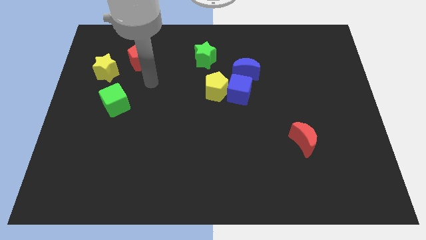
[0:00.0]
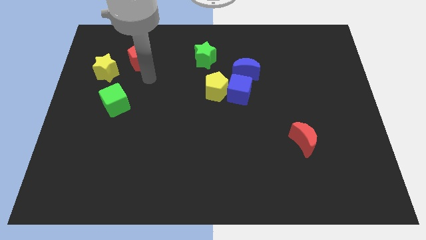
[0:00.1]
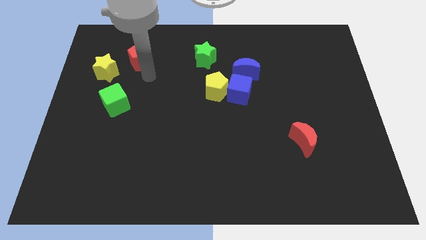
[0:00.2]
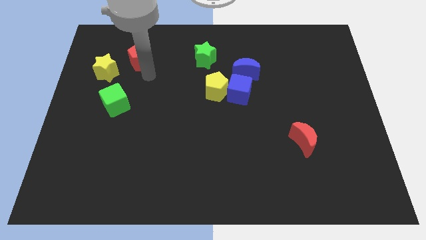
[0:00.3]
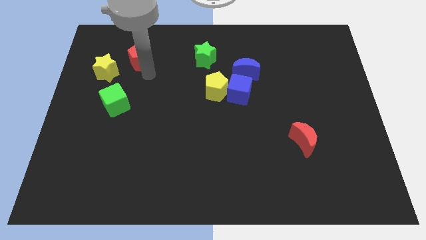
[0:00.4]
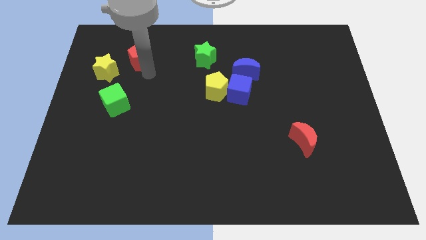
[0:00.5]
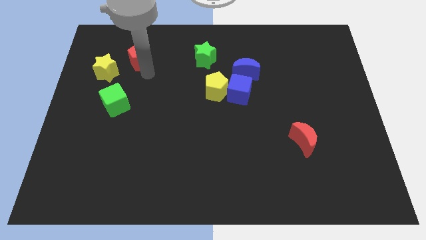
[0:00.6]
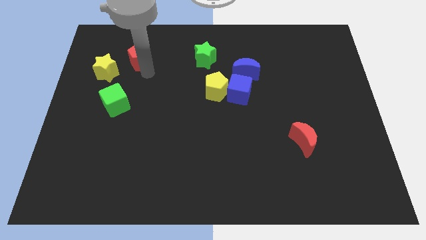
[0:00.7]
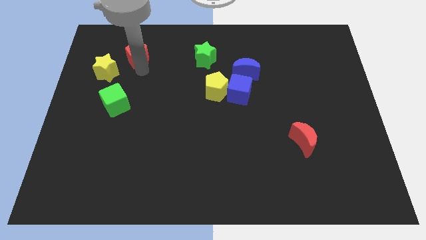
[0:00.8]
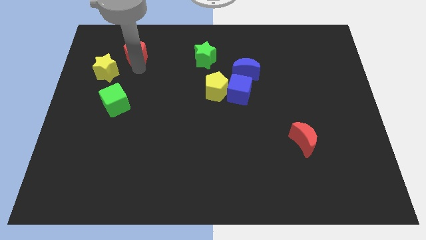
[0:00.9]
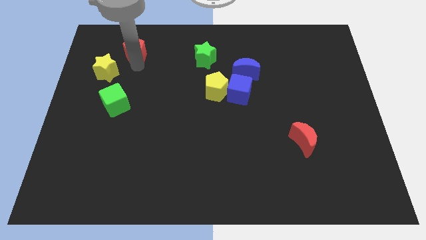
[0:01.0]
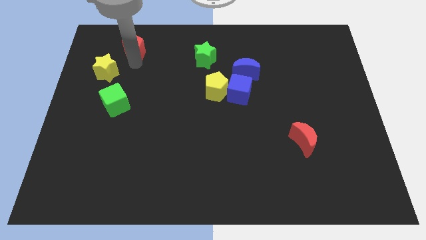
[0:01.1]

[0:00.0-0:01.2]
move the red pentagon slightly up

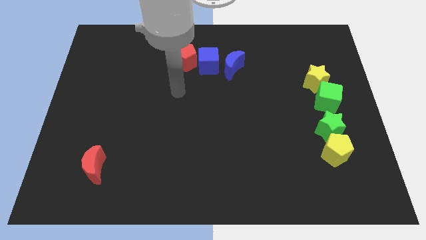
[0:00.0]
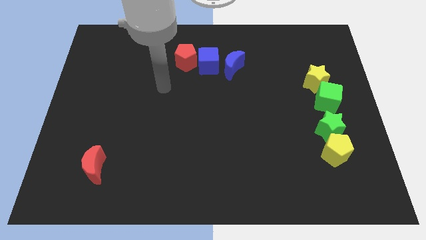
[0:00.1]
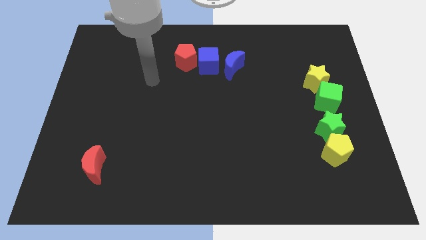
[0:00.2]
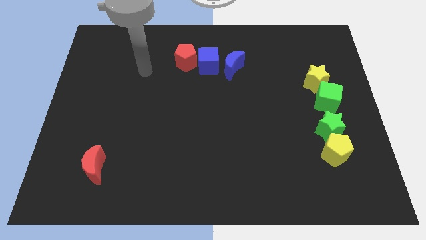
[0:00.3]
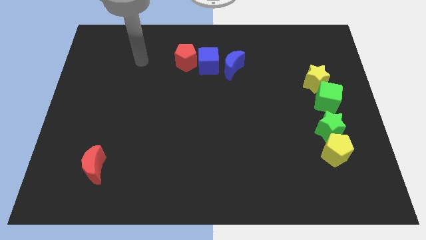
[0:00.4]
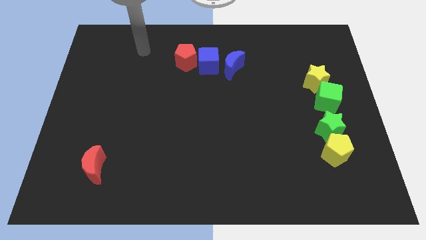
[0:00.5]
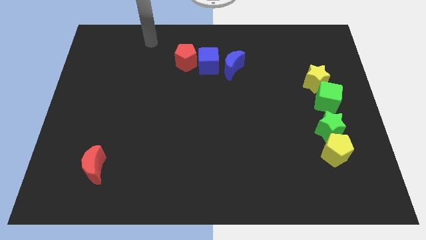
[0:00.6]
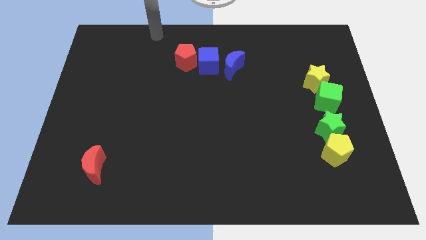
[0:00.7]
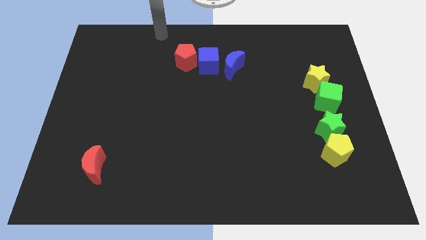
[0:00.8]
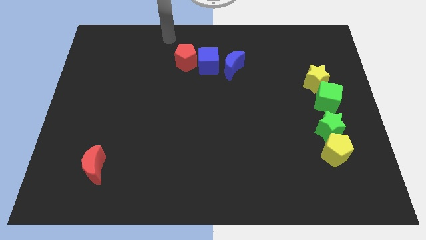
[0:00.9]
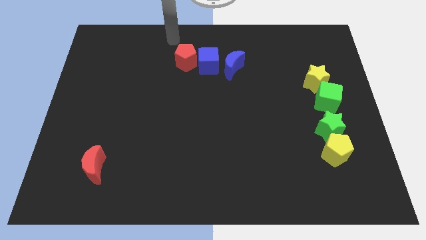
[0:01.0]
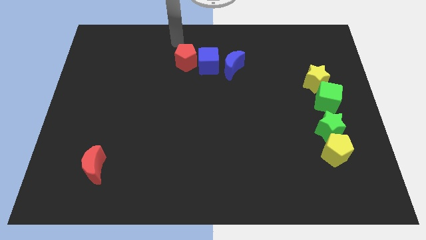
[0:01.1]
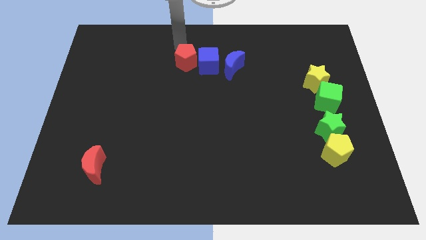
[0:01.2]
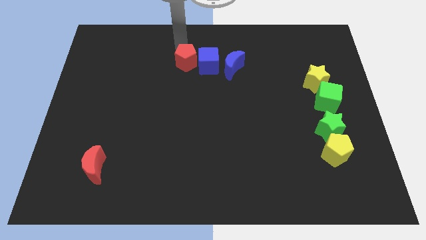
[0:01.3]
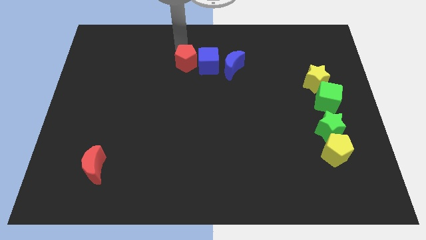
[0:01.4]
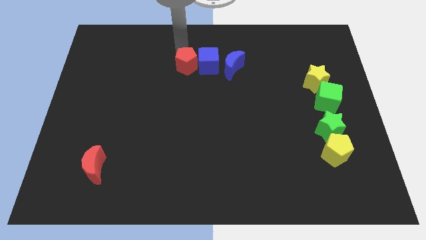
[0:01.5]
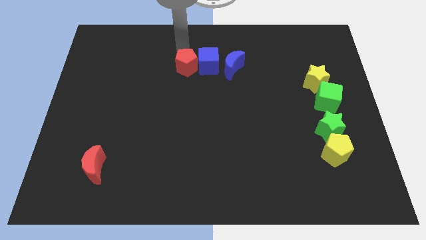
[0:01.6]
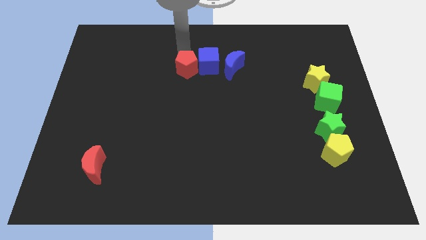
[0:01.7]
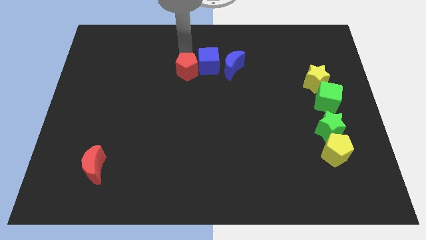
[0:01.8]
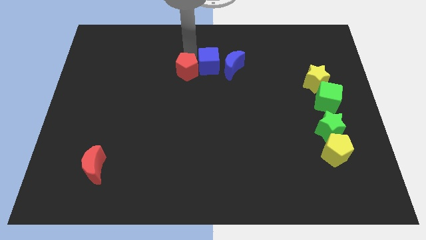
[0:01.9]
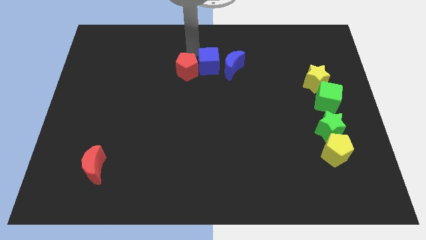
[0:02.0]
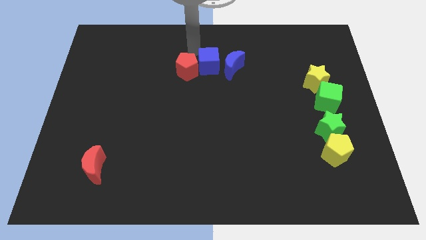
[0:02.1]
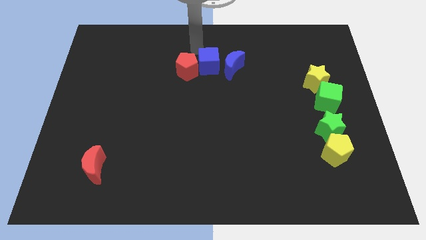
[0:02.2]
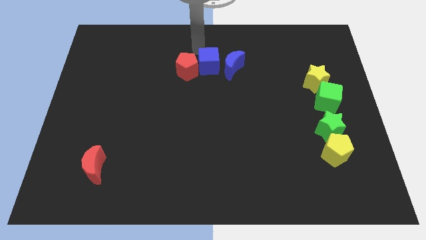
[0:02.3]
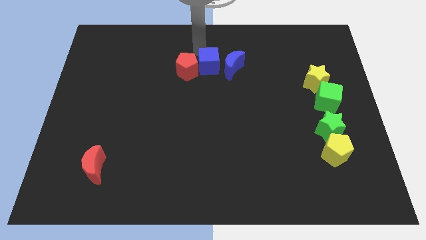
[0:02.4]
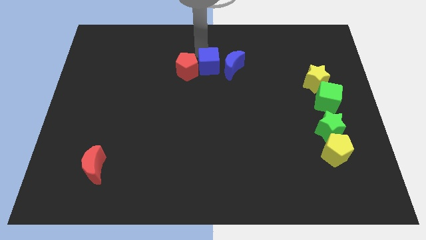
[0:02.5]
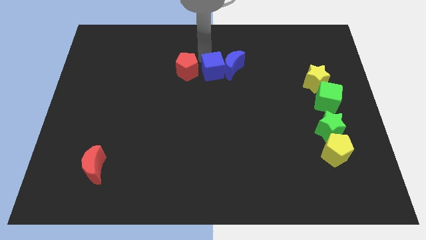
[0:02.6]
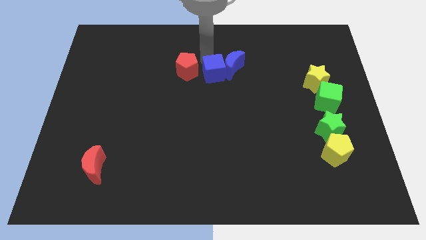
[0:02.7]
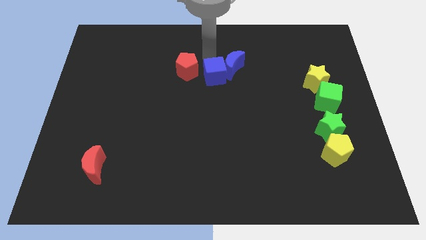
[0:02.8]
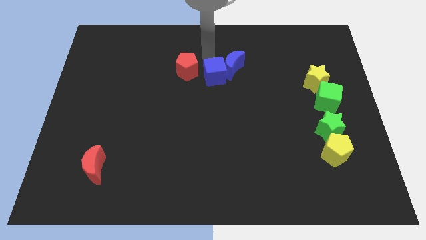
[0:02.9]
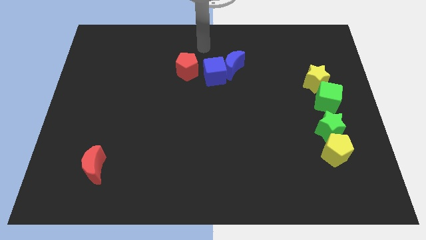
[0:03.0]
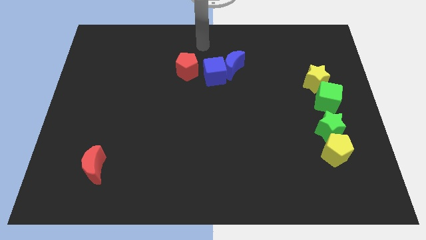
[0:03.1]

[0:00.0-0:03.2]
move blue cube and red pentagon slightly to the down

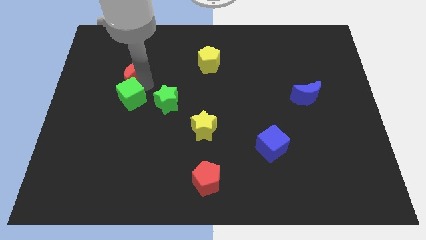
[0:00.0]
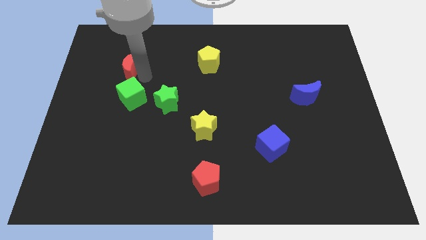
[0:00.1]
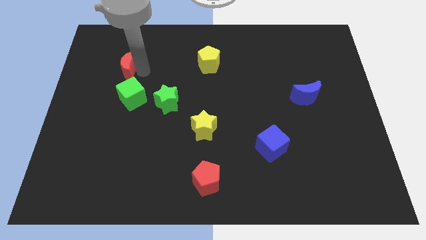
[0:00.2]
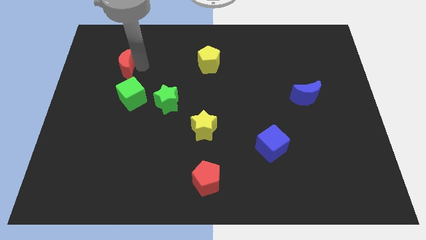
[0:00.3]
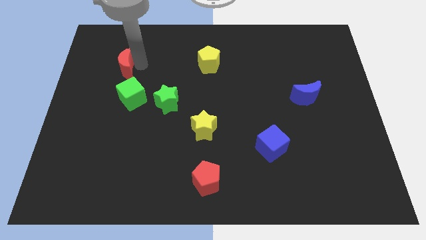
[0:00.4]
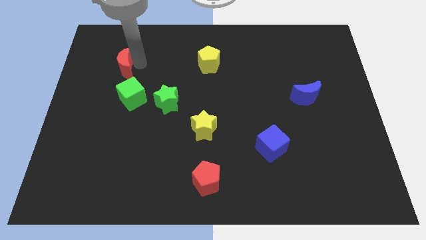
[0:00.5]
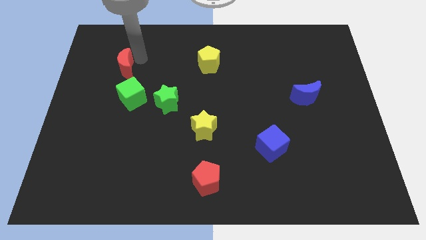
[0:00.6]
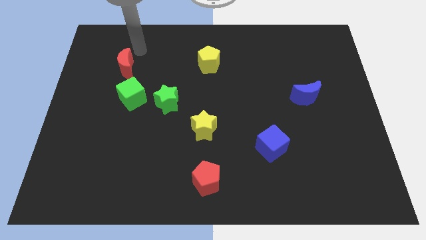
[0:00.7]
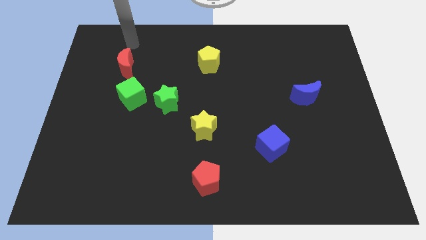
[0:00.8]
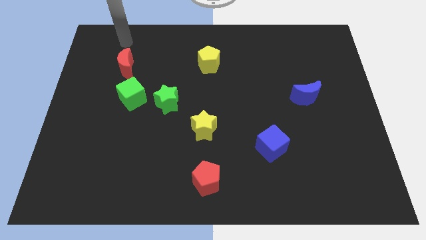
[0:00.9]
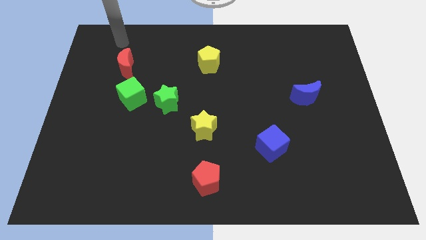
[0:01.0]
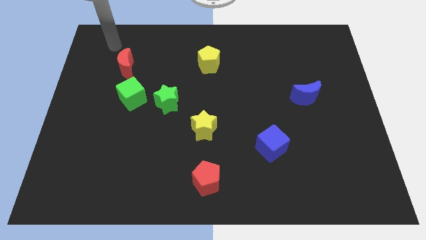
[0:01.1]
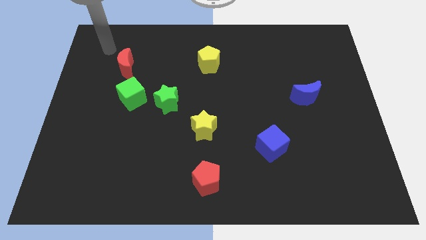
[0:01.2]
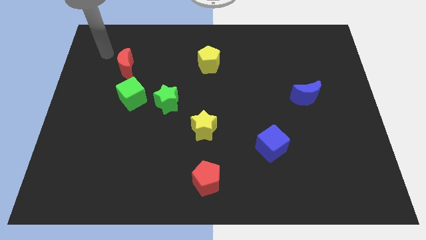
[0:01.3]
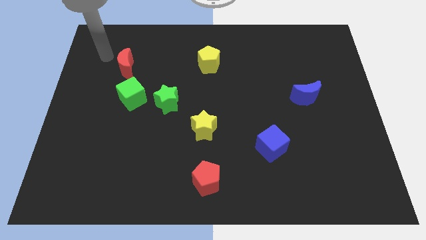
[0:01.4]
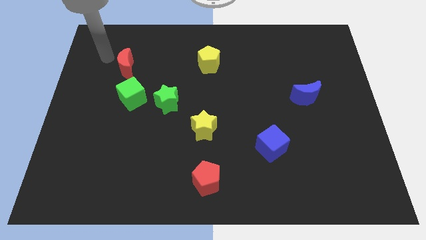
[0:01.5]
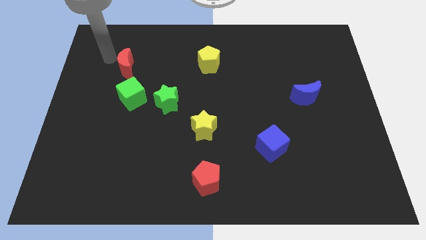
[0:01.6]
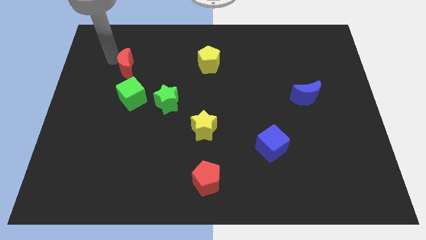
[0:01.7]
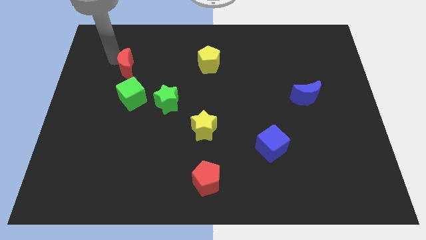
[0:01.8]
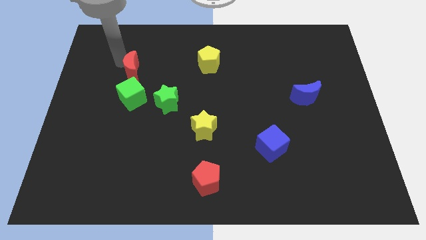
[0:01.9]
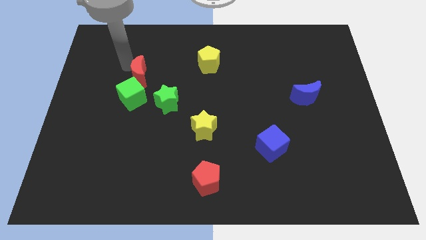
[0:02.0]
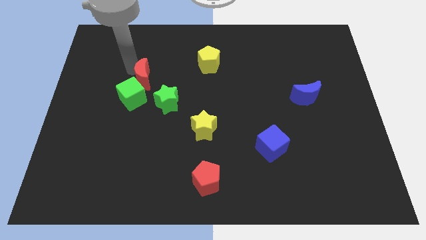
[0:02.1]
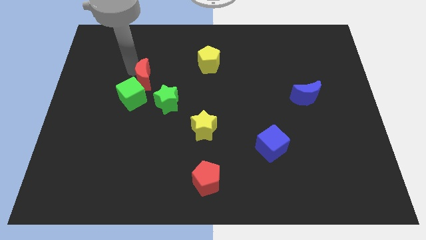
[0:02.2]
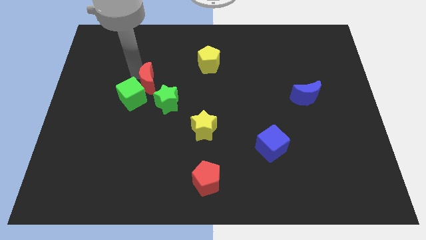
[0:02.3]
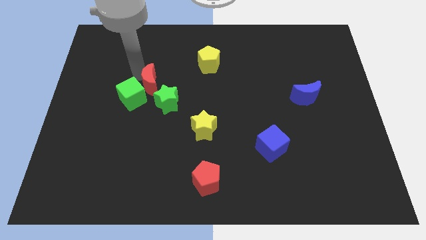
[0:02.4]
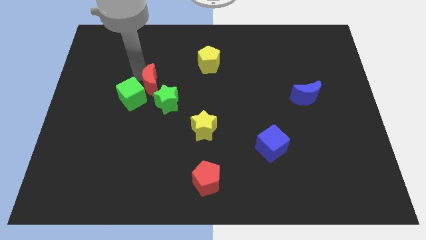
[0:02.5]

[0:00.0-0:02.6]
move red moon to the diagonal top right of green cube

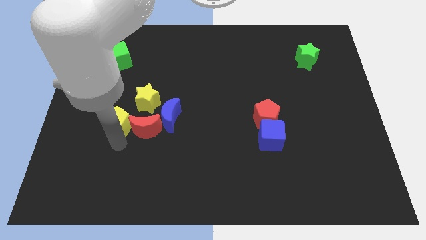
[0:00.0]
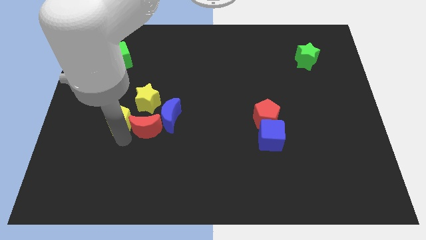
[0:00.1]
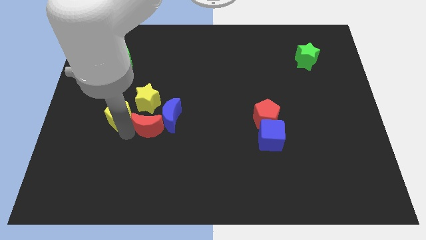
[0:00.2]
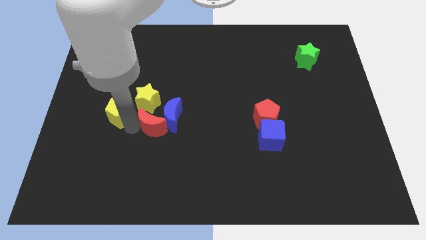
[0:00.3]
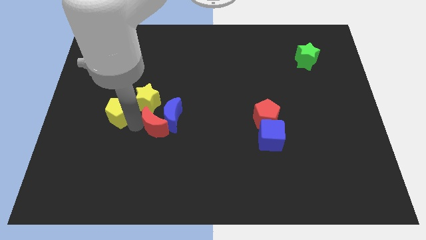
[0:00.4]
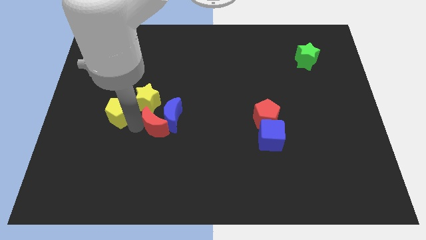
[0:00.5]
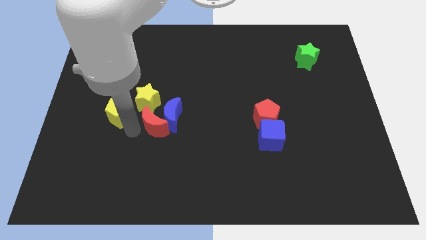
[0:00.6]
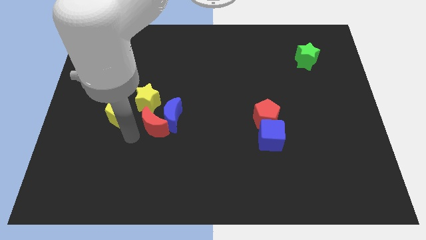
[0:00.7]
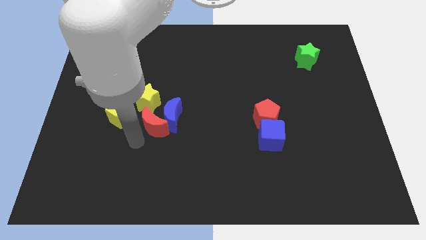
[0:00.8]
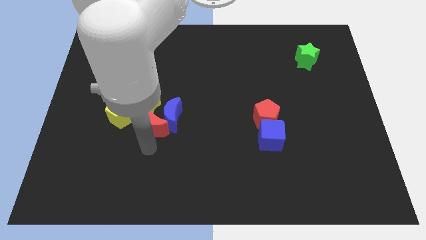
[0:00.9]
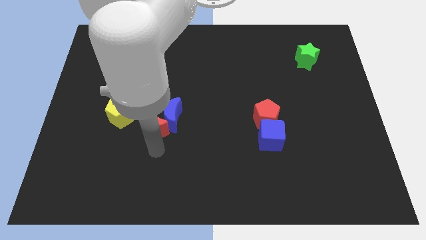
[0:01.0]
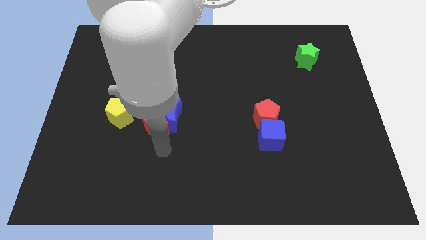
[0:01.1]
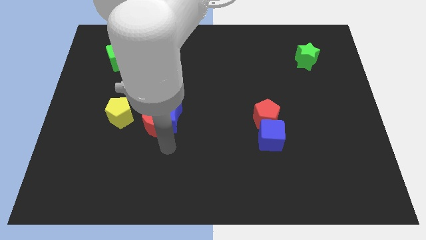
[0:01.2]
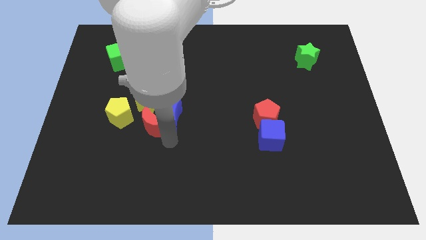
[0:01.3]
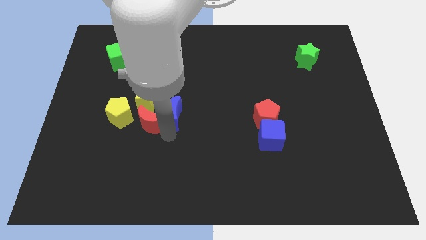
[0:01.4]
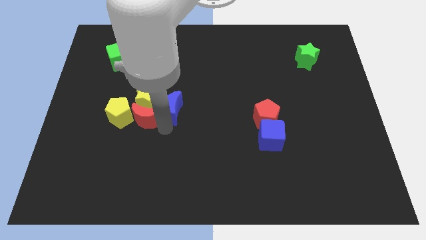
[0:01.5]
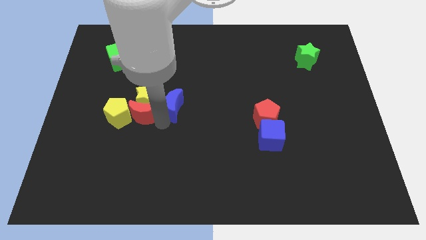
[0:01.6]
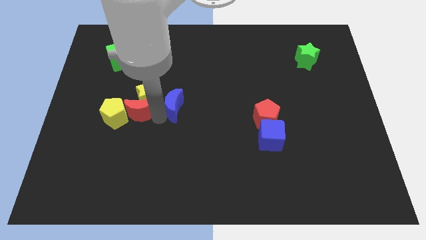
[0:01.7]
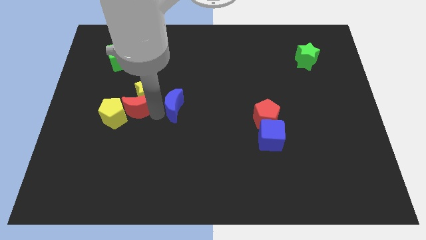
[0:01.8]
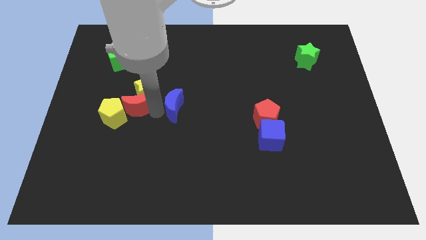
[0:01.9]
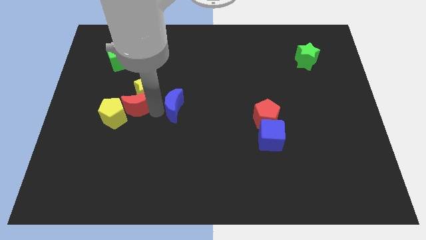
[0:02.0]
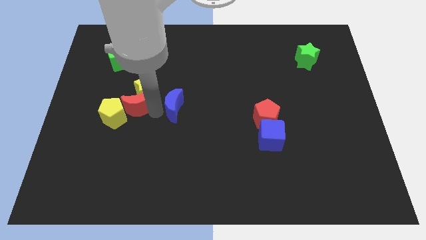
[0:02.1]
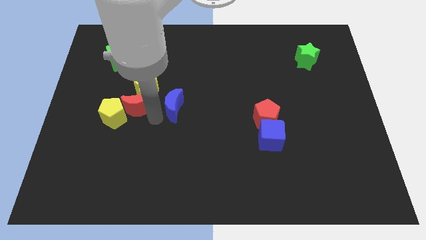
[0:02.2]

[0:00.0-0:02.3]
slightly push red crescent towards the yellow star
